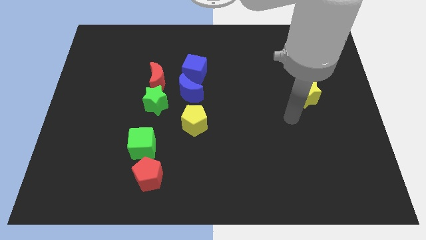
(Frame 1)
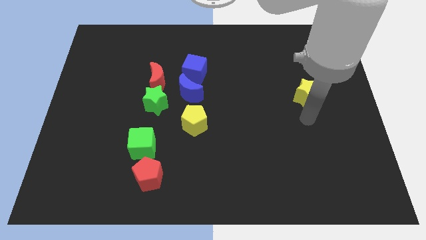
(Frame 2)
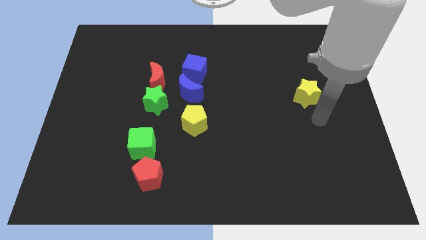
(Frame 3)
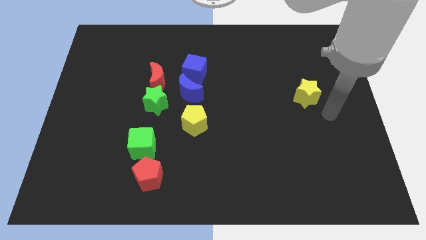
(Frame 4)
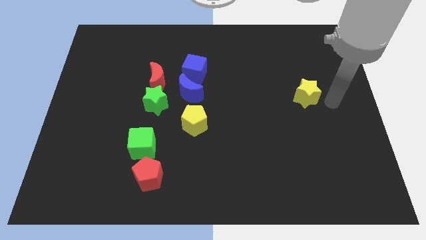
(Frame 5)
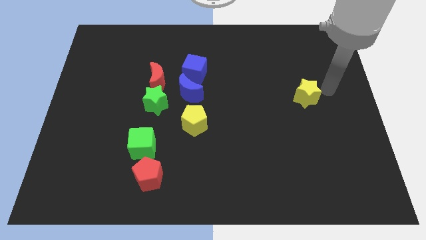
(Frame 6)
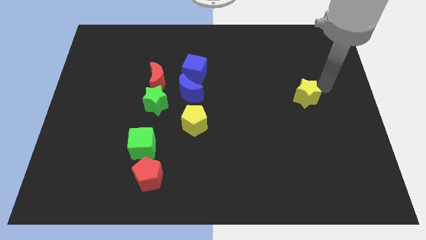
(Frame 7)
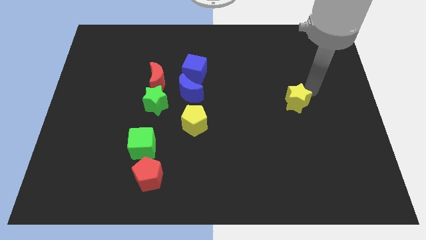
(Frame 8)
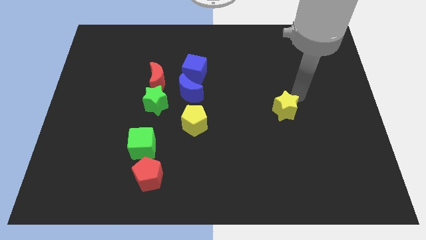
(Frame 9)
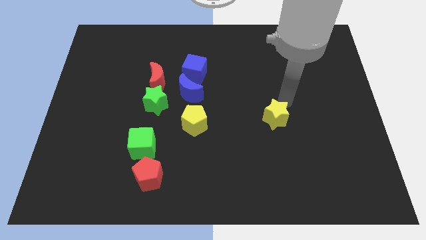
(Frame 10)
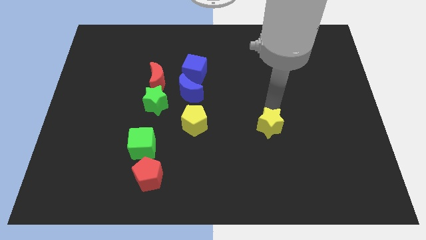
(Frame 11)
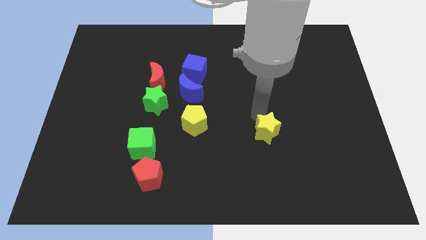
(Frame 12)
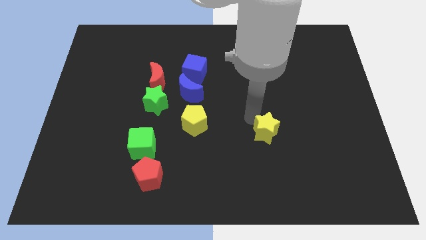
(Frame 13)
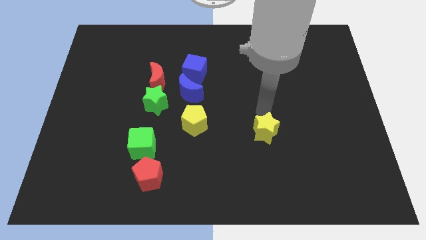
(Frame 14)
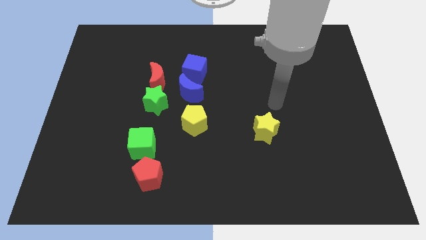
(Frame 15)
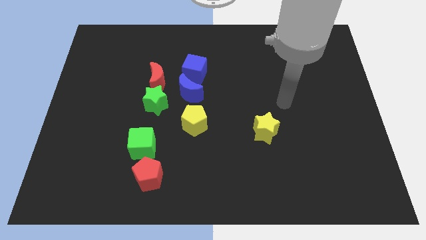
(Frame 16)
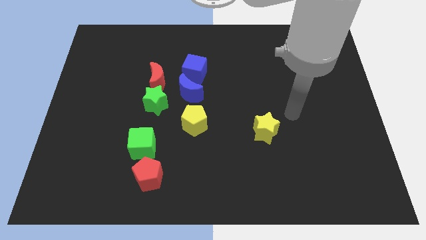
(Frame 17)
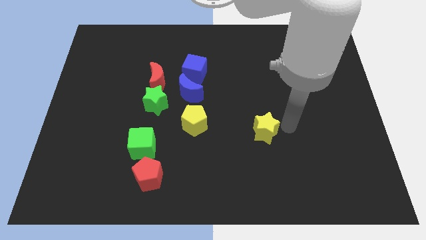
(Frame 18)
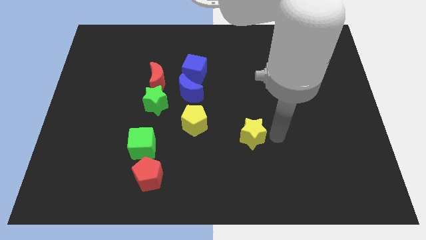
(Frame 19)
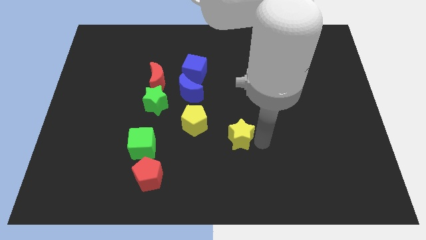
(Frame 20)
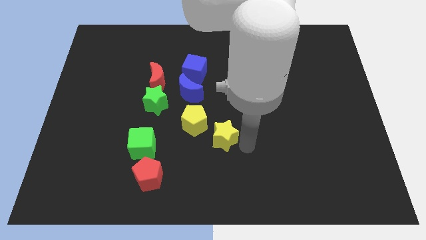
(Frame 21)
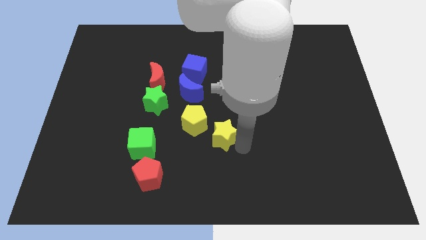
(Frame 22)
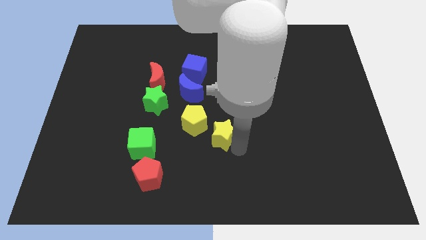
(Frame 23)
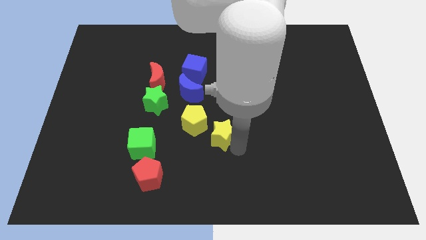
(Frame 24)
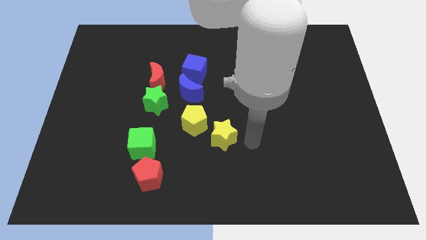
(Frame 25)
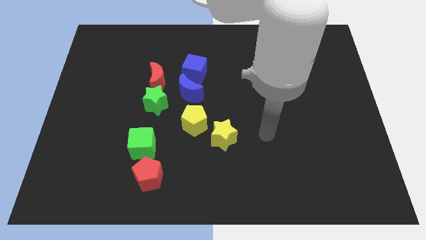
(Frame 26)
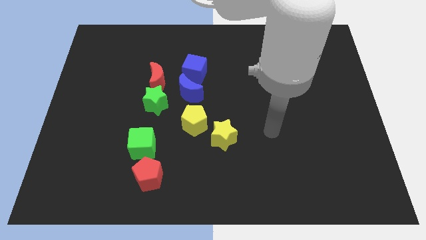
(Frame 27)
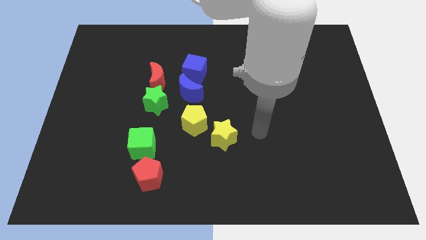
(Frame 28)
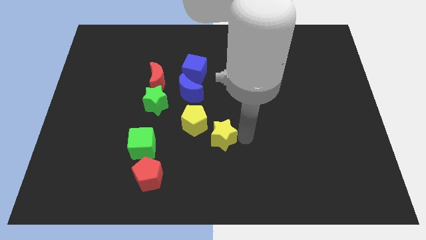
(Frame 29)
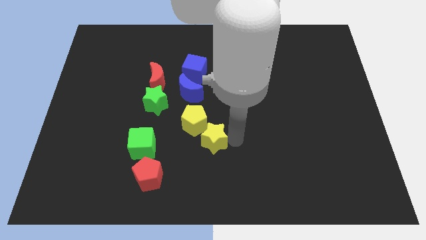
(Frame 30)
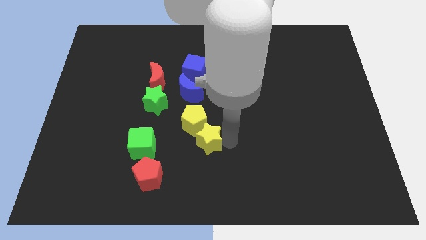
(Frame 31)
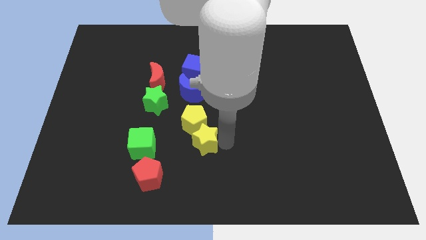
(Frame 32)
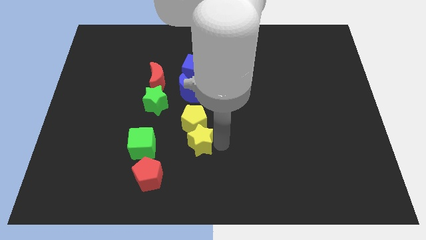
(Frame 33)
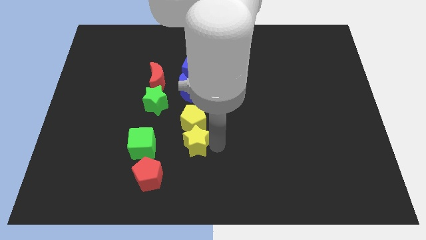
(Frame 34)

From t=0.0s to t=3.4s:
move the yellow star below the yellow pentagon

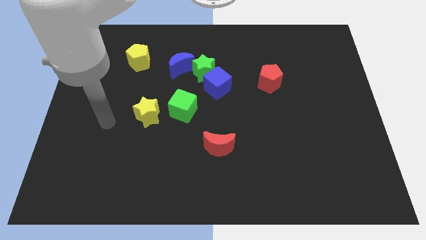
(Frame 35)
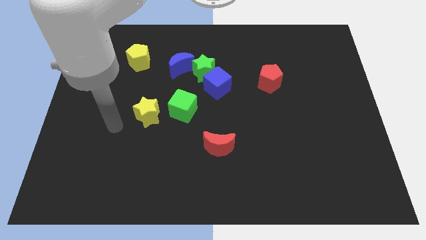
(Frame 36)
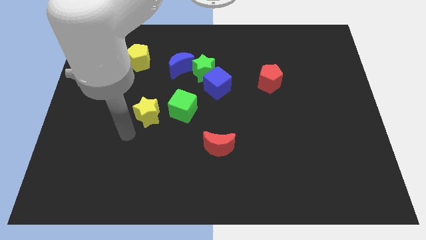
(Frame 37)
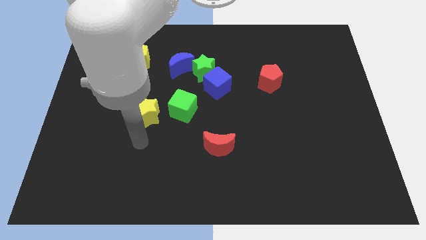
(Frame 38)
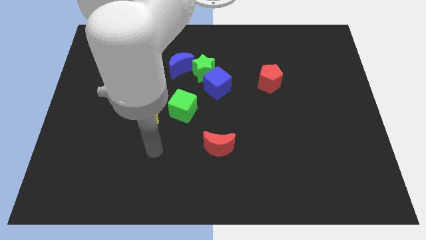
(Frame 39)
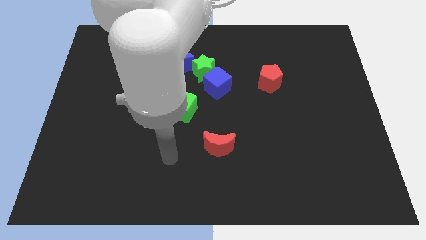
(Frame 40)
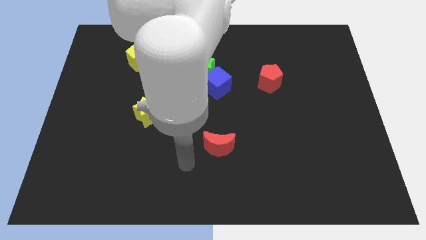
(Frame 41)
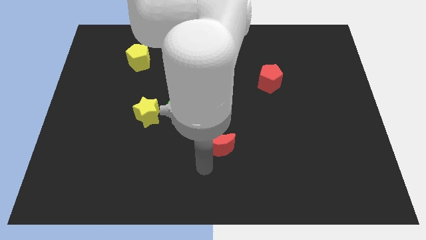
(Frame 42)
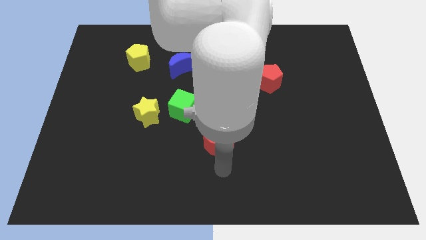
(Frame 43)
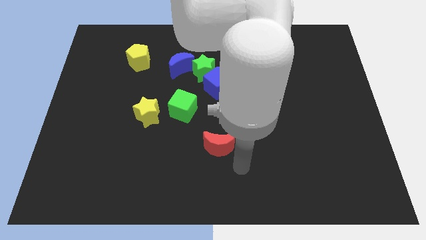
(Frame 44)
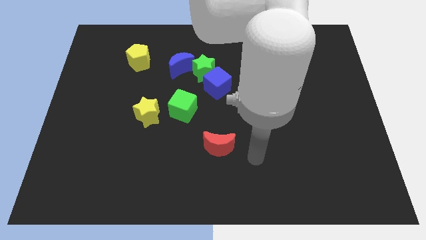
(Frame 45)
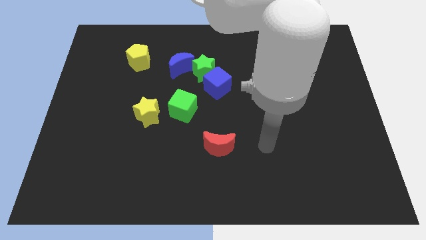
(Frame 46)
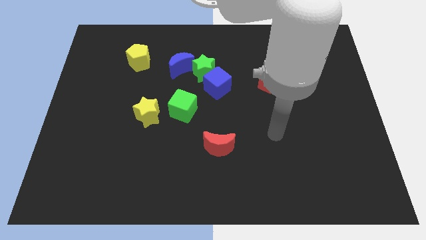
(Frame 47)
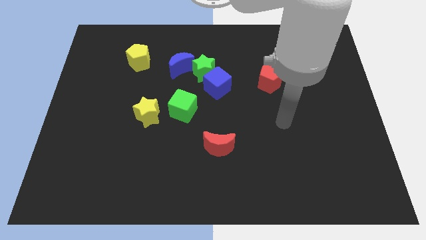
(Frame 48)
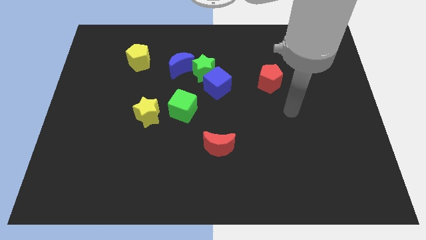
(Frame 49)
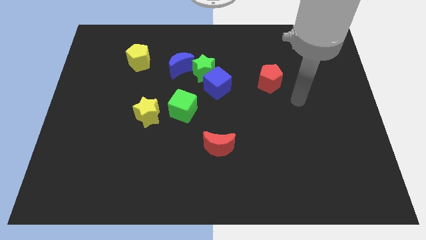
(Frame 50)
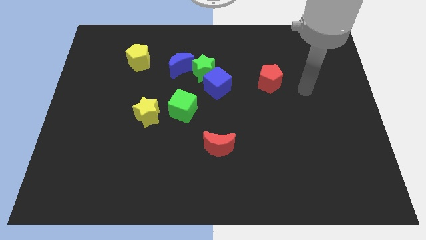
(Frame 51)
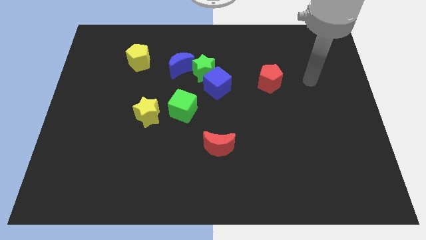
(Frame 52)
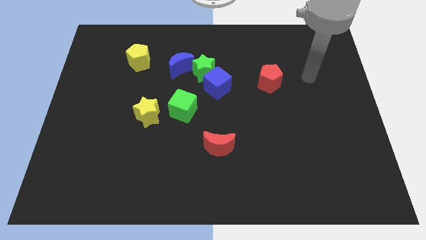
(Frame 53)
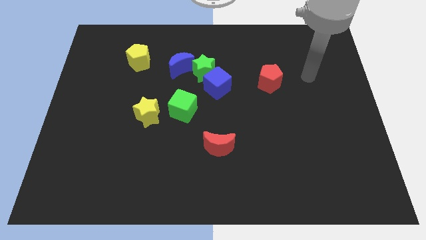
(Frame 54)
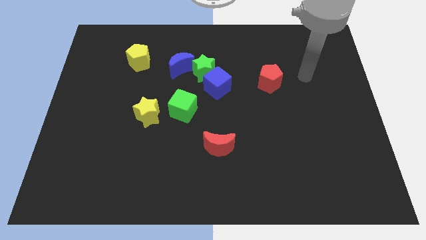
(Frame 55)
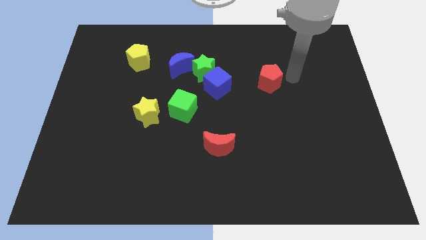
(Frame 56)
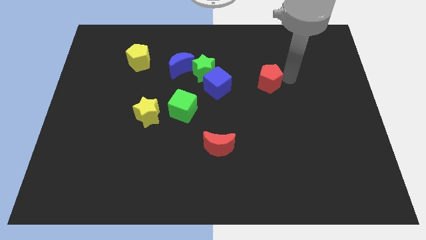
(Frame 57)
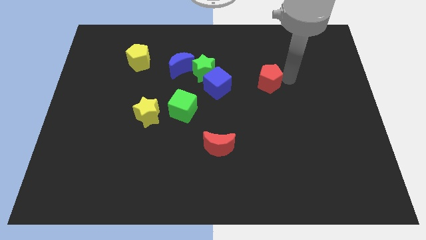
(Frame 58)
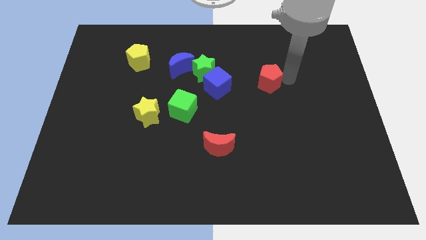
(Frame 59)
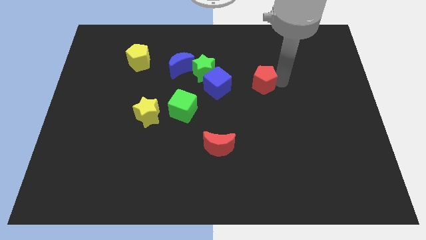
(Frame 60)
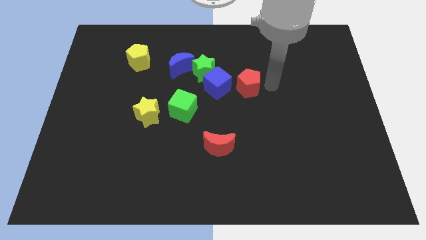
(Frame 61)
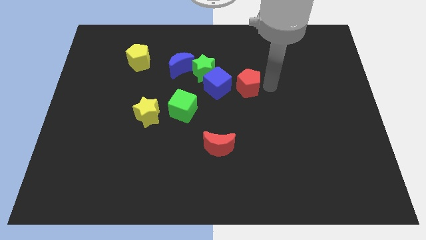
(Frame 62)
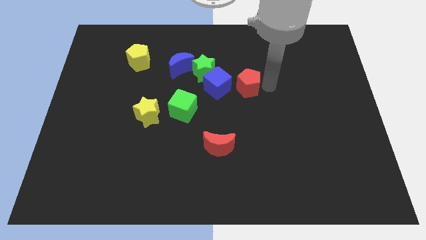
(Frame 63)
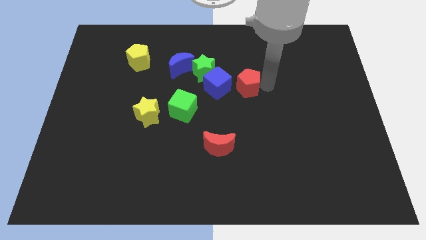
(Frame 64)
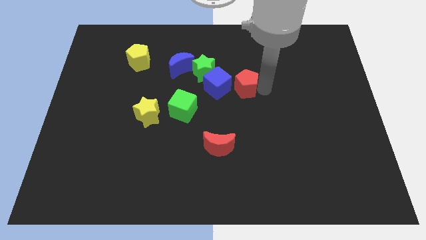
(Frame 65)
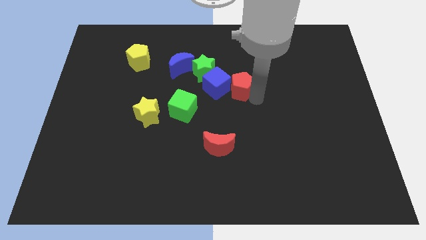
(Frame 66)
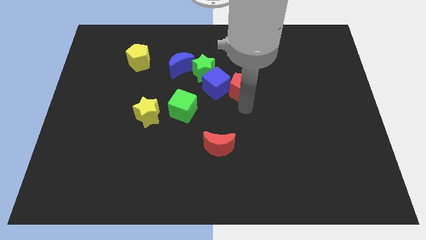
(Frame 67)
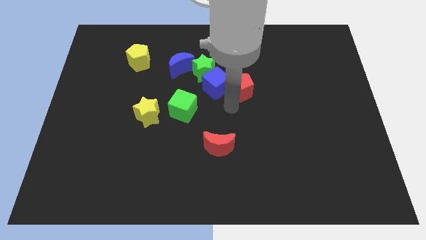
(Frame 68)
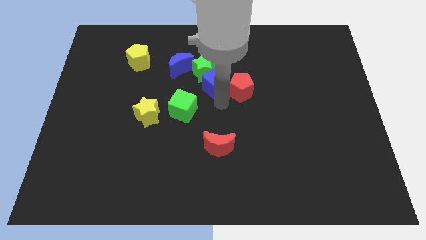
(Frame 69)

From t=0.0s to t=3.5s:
move red pentagon near blue cube

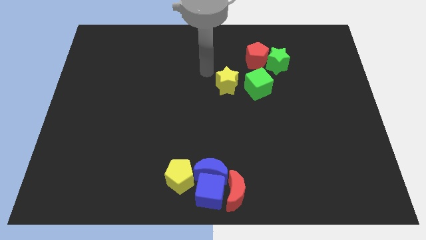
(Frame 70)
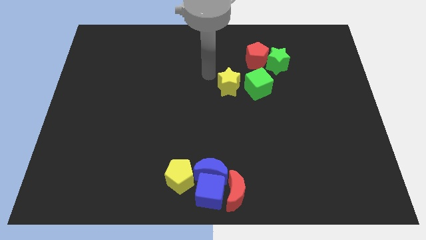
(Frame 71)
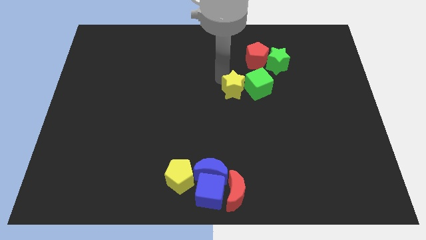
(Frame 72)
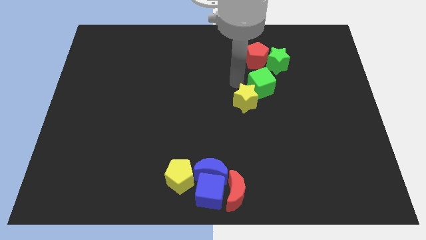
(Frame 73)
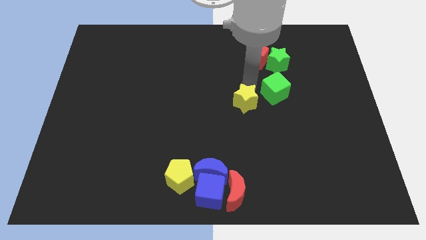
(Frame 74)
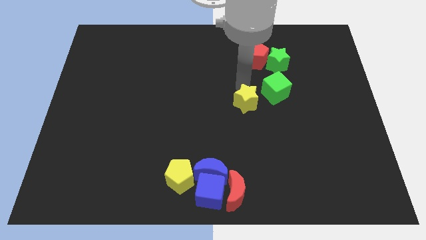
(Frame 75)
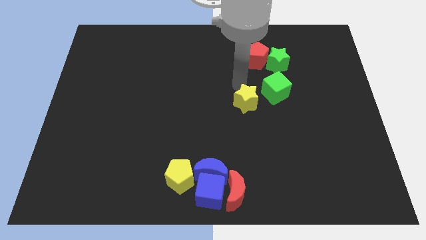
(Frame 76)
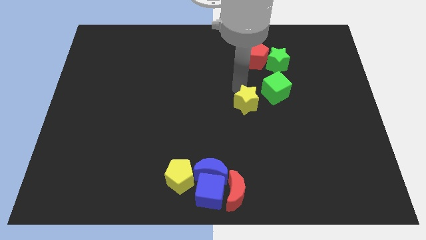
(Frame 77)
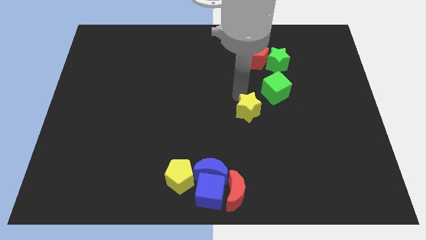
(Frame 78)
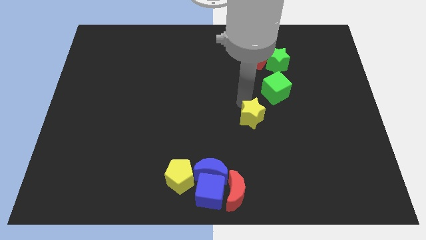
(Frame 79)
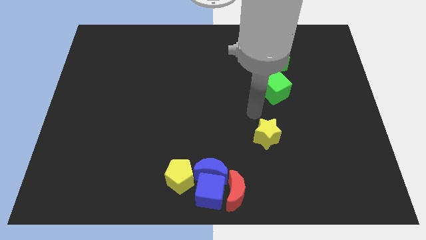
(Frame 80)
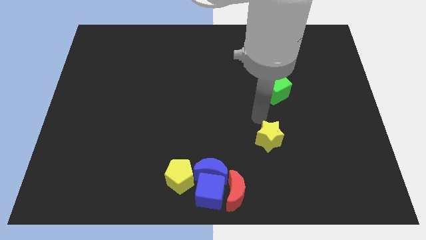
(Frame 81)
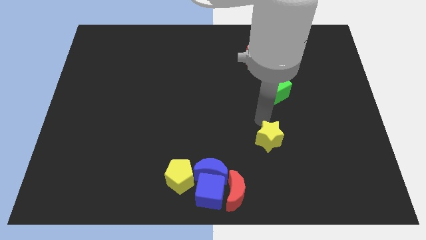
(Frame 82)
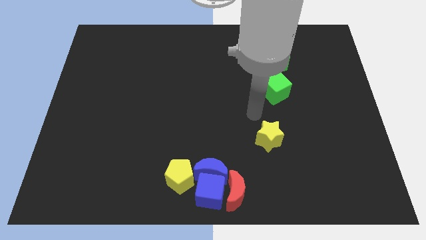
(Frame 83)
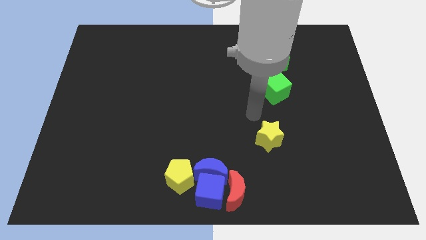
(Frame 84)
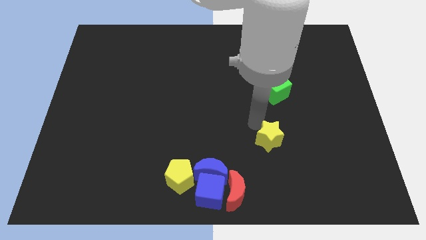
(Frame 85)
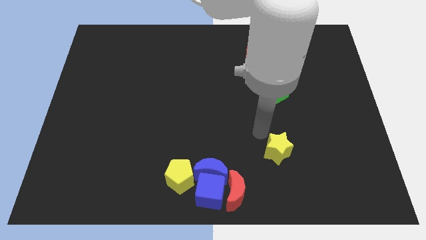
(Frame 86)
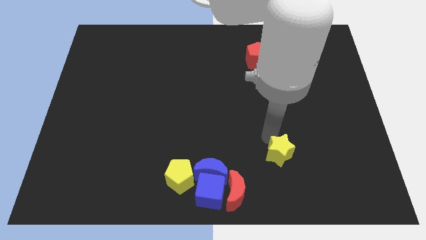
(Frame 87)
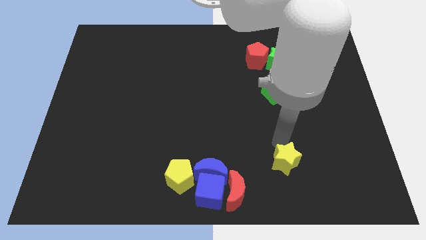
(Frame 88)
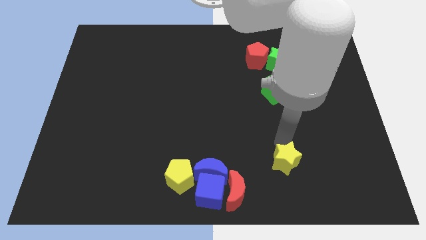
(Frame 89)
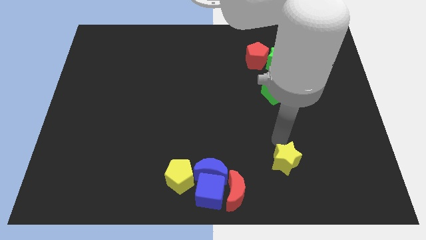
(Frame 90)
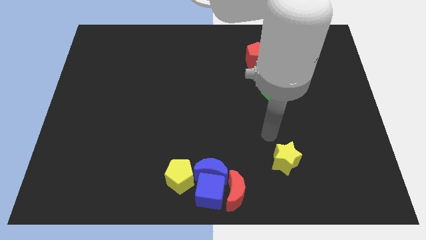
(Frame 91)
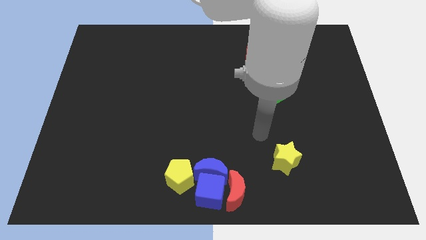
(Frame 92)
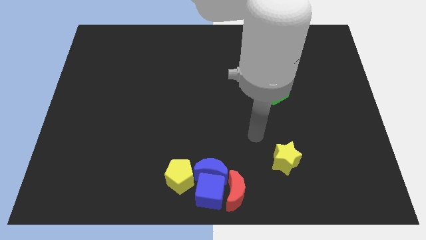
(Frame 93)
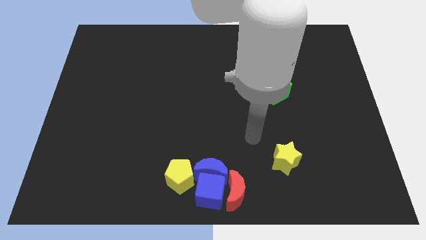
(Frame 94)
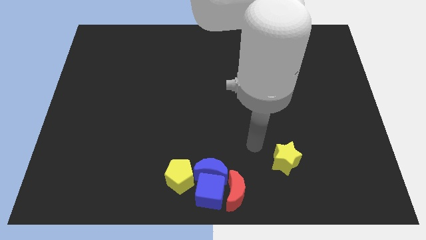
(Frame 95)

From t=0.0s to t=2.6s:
move the yellow star towards the bottom right
